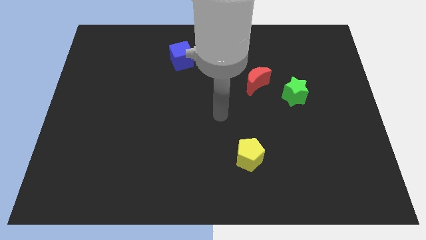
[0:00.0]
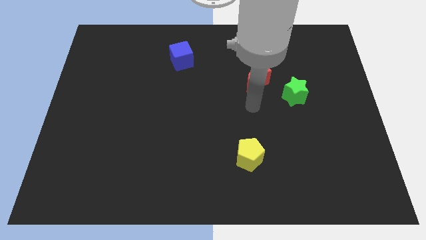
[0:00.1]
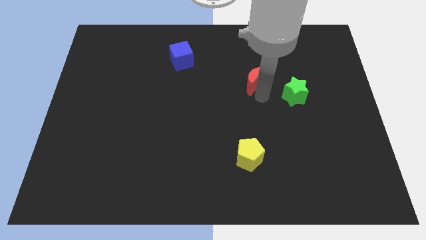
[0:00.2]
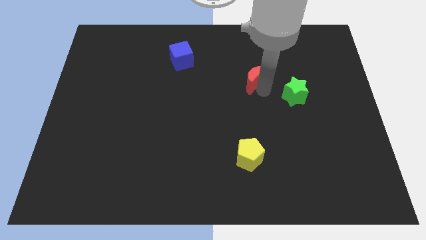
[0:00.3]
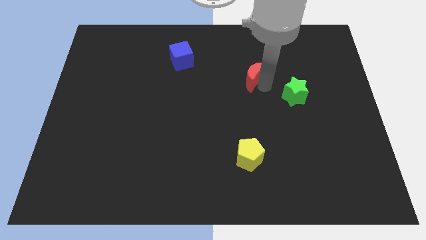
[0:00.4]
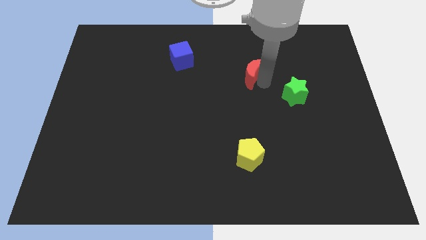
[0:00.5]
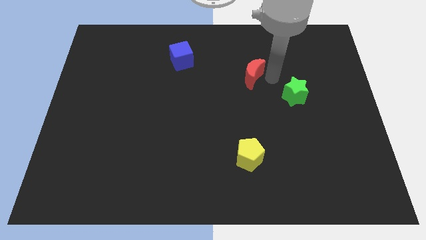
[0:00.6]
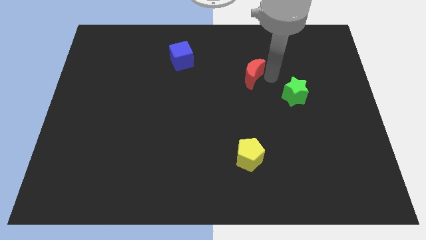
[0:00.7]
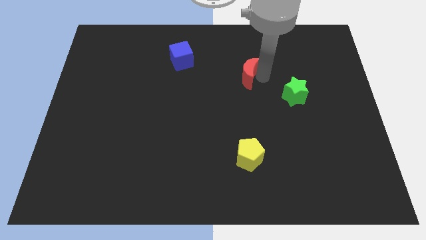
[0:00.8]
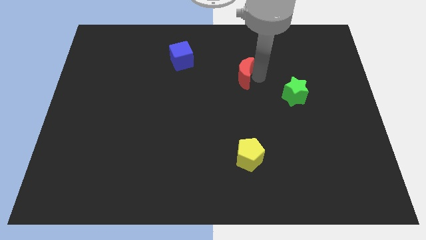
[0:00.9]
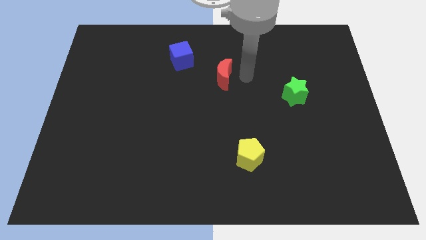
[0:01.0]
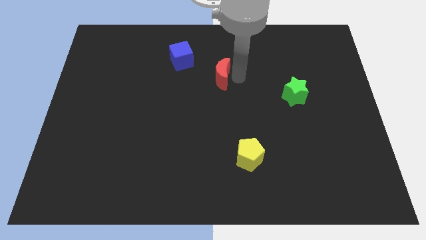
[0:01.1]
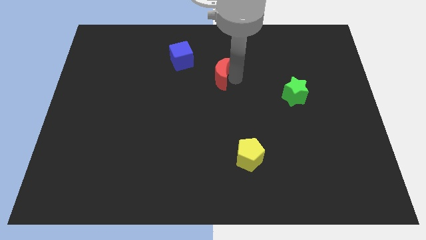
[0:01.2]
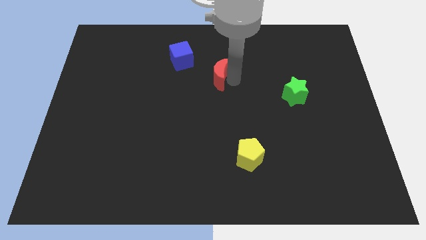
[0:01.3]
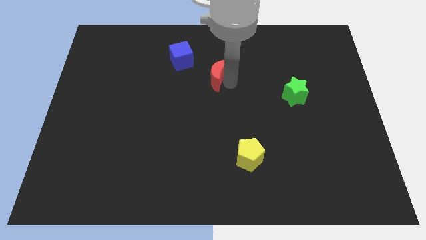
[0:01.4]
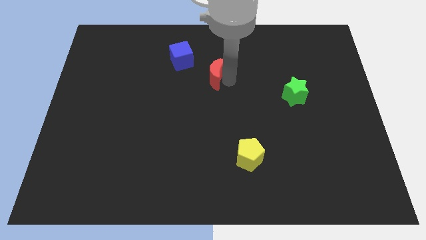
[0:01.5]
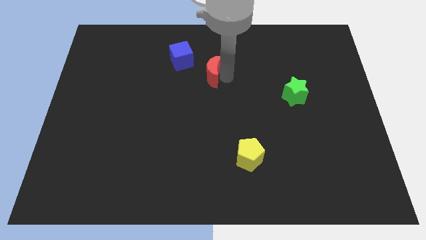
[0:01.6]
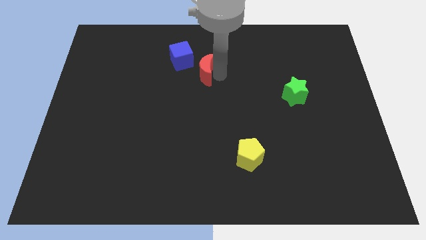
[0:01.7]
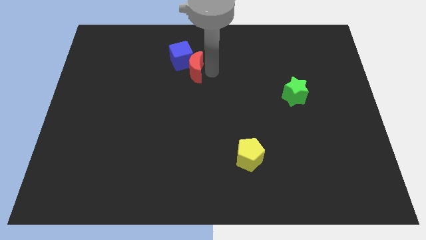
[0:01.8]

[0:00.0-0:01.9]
push the red moon close to the blue block

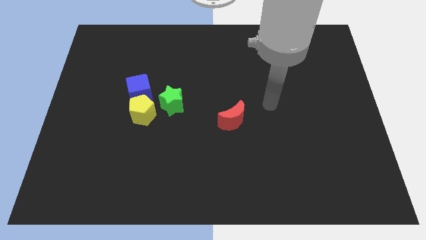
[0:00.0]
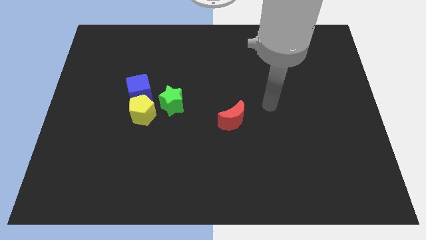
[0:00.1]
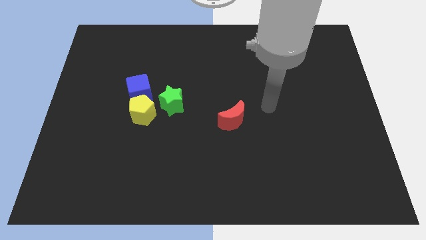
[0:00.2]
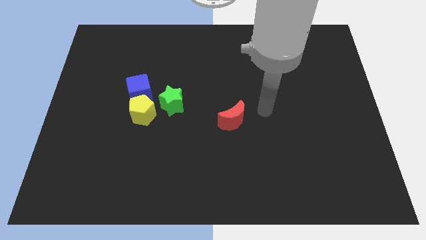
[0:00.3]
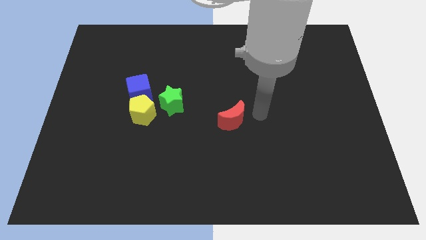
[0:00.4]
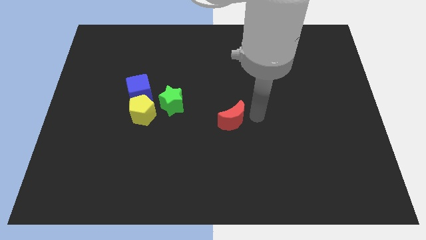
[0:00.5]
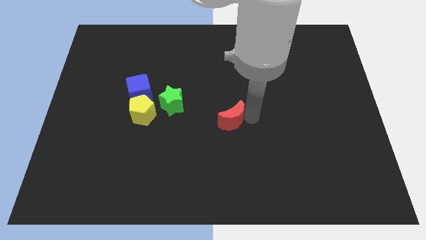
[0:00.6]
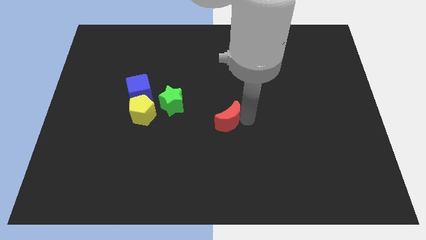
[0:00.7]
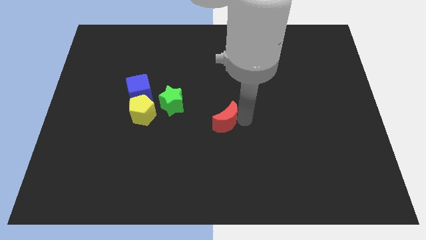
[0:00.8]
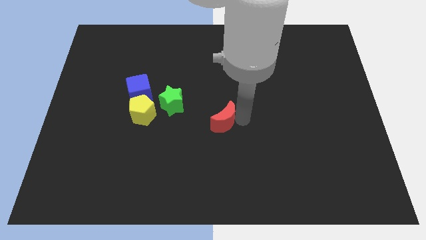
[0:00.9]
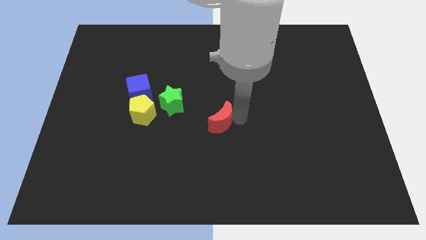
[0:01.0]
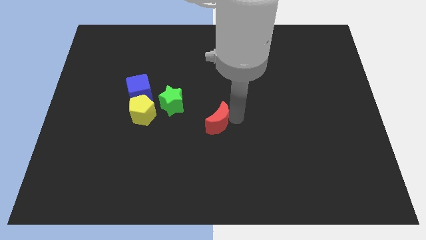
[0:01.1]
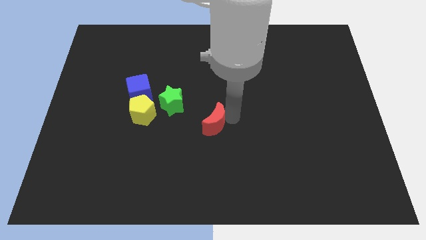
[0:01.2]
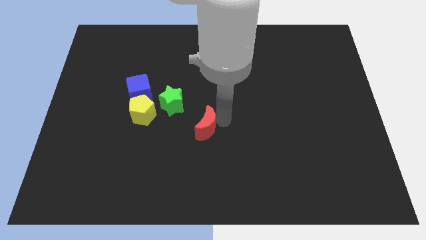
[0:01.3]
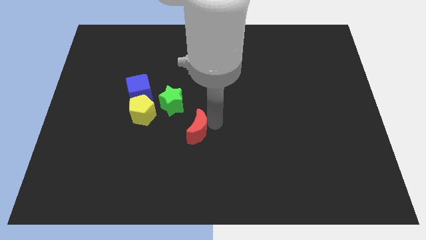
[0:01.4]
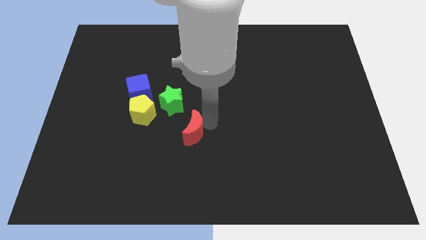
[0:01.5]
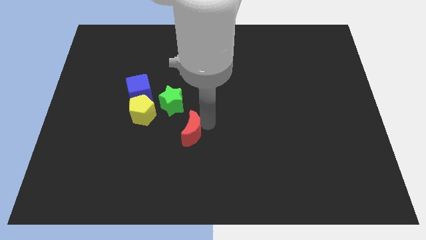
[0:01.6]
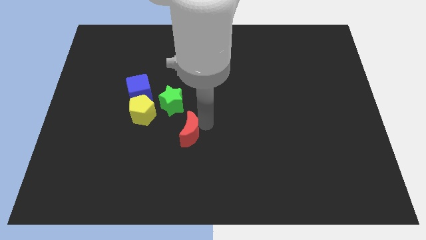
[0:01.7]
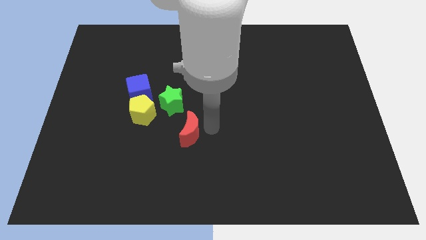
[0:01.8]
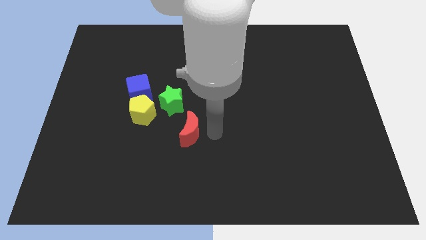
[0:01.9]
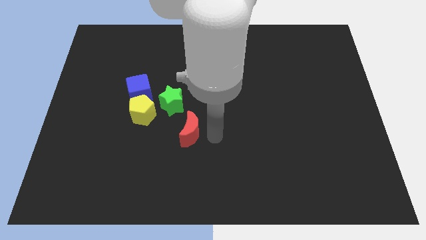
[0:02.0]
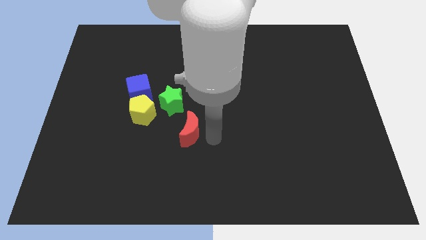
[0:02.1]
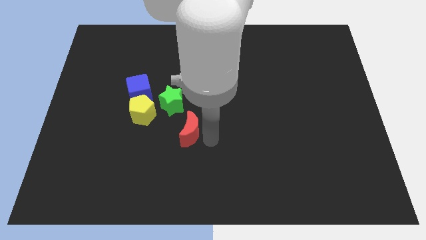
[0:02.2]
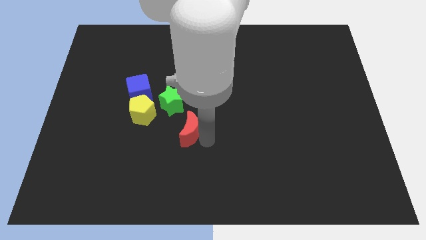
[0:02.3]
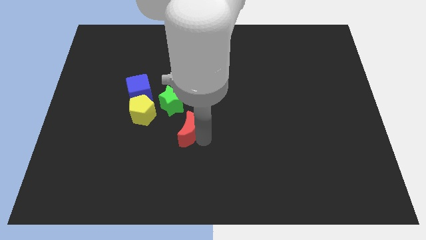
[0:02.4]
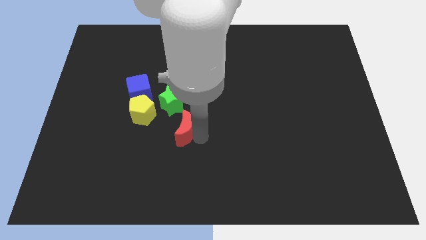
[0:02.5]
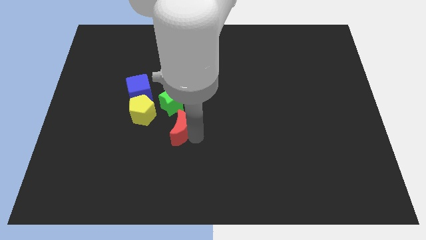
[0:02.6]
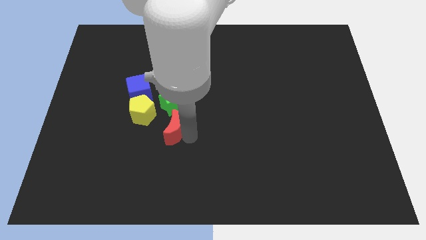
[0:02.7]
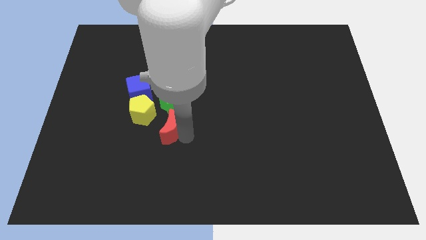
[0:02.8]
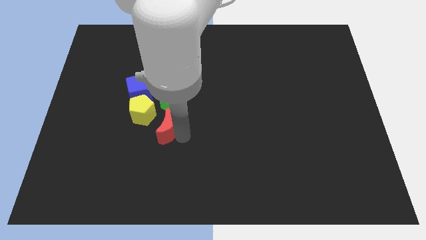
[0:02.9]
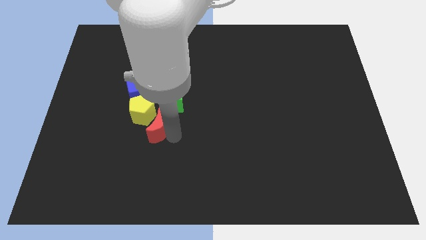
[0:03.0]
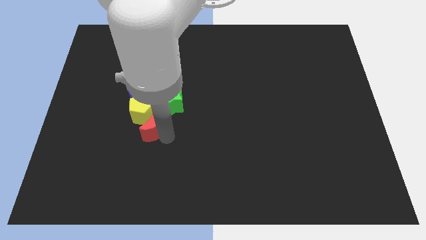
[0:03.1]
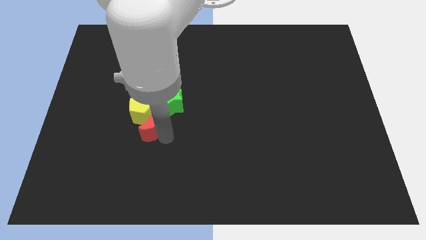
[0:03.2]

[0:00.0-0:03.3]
move the red moon towards the yellow pentagon

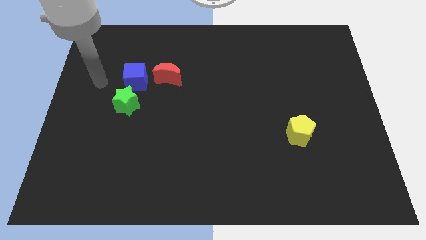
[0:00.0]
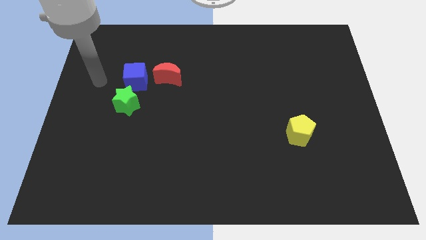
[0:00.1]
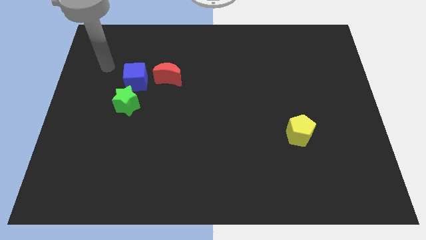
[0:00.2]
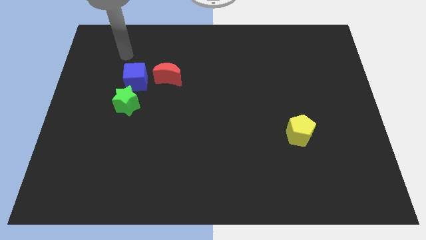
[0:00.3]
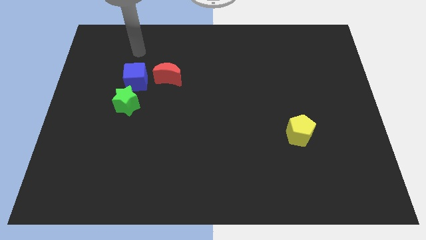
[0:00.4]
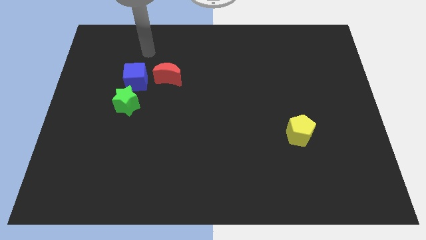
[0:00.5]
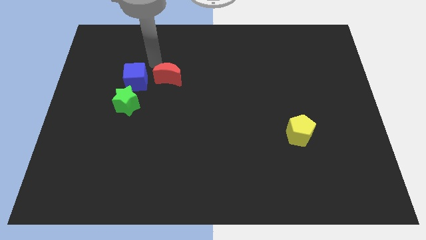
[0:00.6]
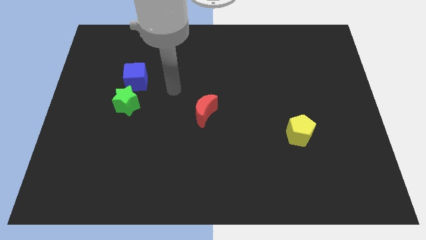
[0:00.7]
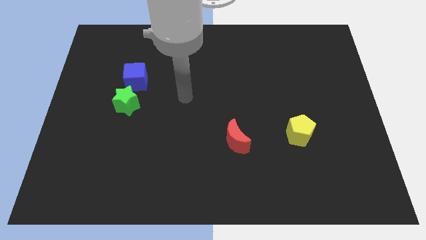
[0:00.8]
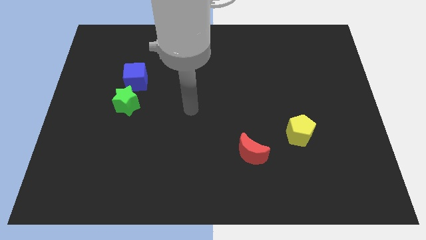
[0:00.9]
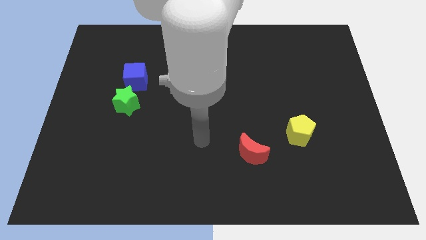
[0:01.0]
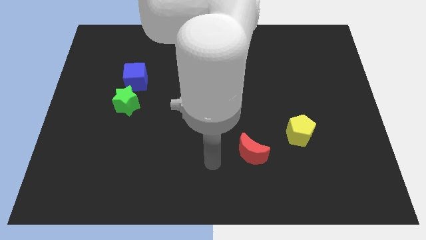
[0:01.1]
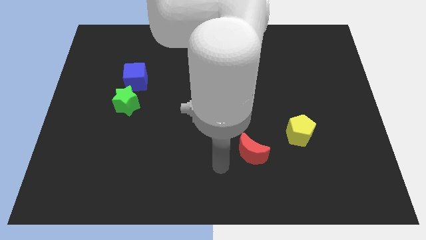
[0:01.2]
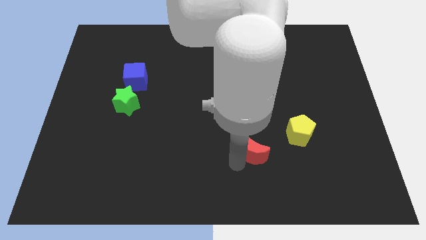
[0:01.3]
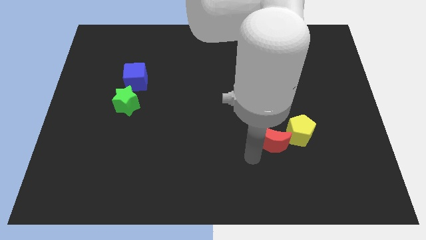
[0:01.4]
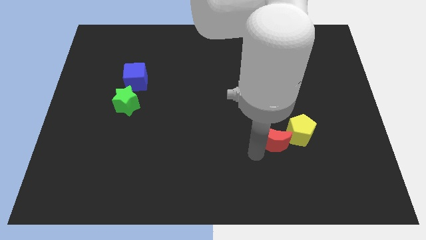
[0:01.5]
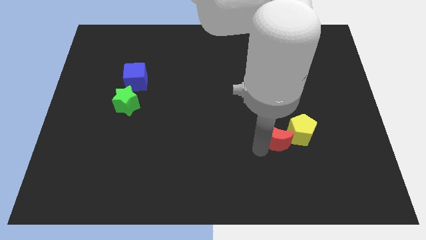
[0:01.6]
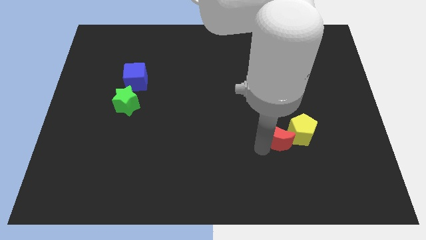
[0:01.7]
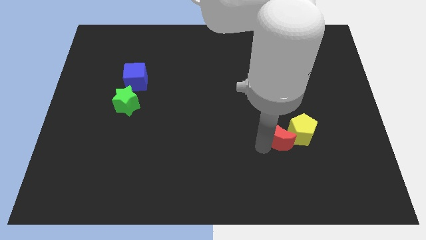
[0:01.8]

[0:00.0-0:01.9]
push the red moon towards the yellow pentagon

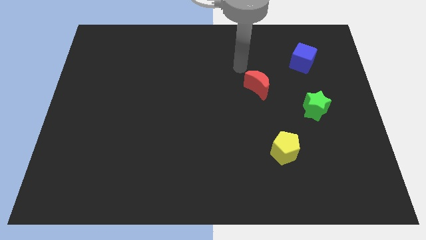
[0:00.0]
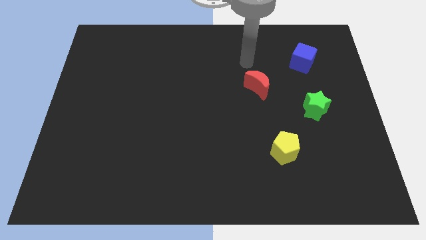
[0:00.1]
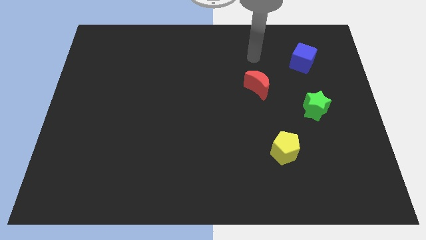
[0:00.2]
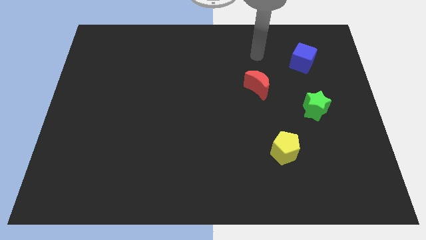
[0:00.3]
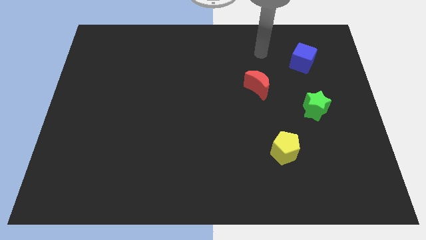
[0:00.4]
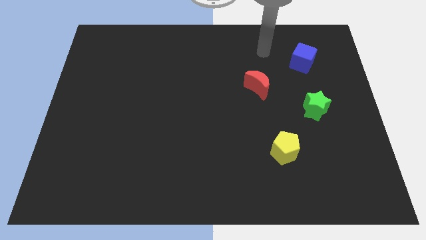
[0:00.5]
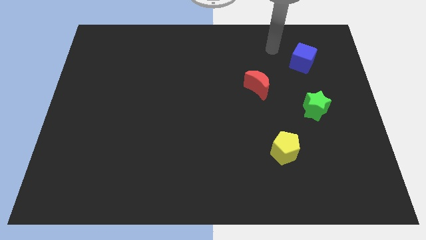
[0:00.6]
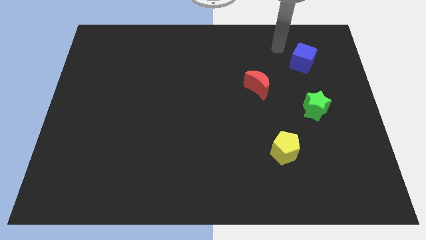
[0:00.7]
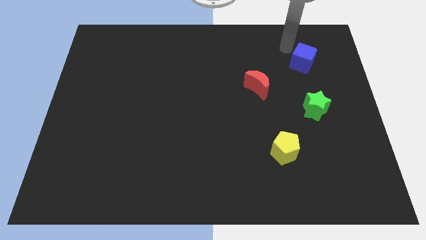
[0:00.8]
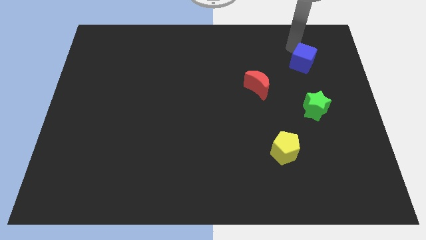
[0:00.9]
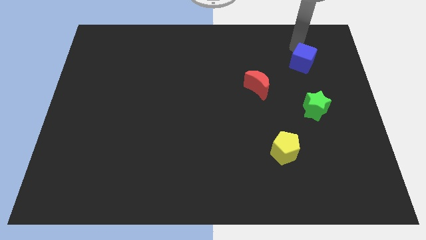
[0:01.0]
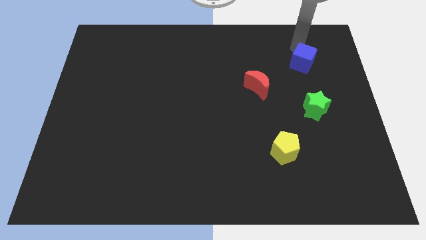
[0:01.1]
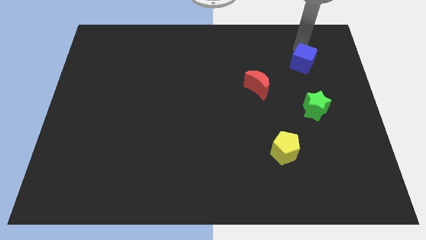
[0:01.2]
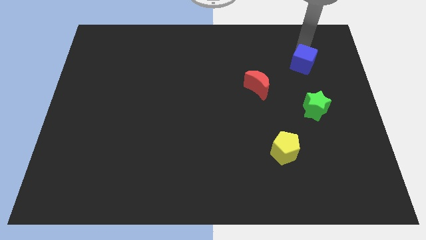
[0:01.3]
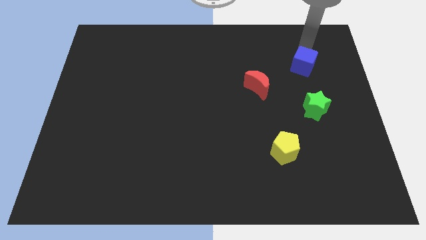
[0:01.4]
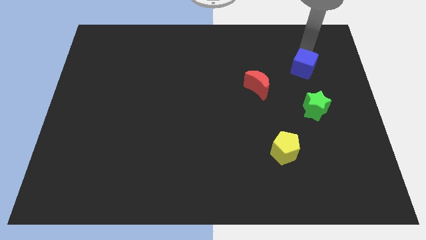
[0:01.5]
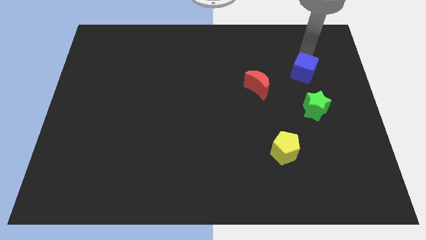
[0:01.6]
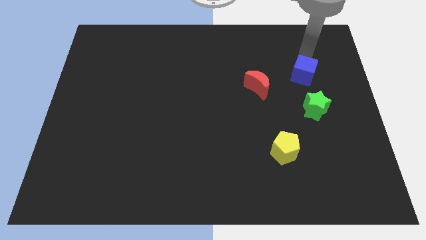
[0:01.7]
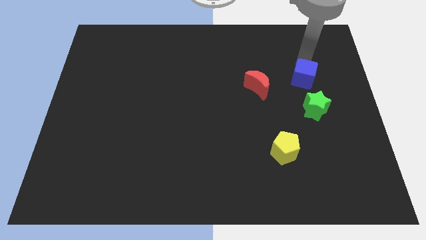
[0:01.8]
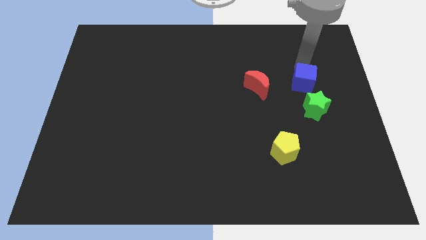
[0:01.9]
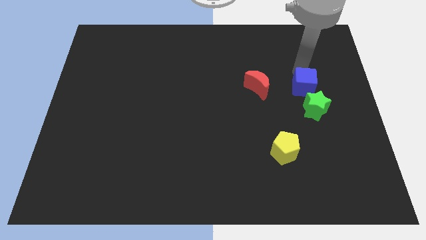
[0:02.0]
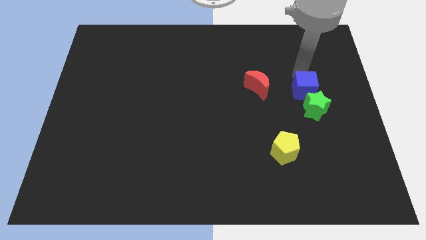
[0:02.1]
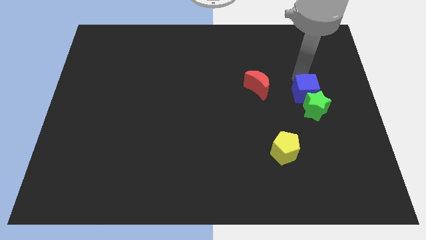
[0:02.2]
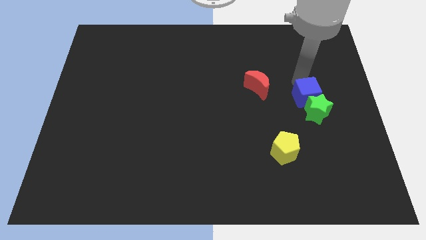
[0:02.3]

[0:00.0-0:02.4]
slide the blue cube next to the star
